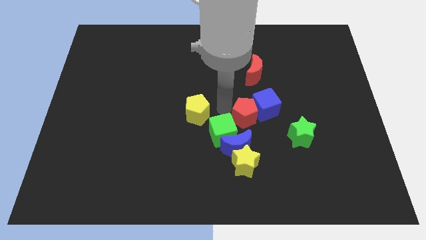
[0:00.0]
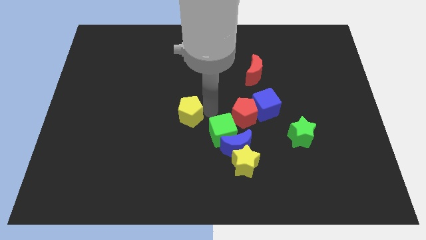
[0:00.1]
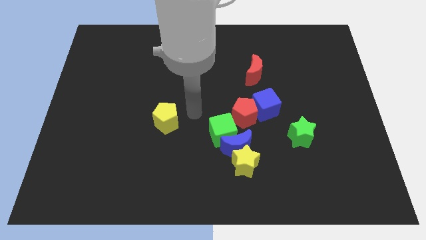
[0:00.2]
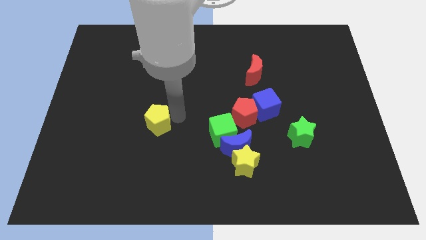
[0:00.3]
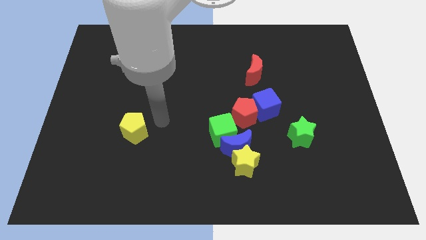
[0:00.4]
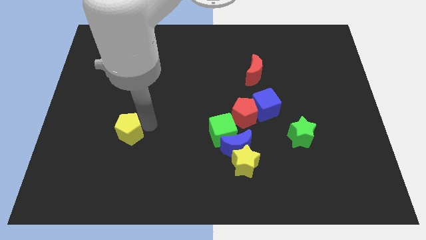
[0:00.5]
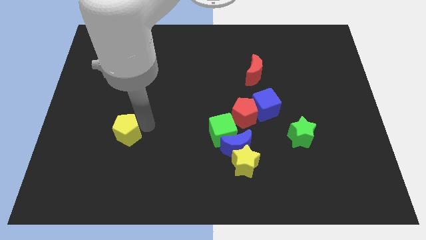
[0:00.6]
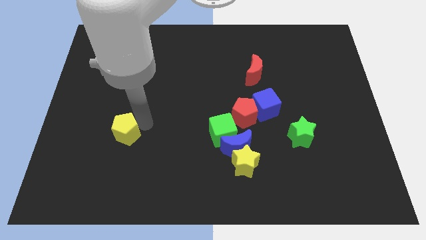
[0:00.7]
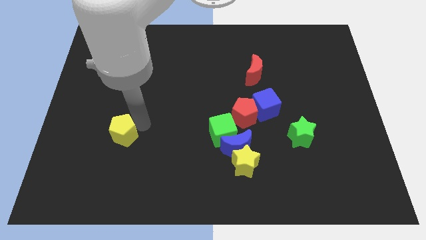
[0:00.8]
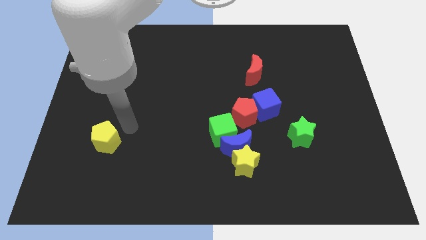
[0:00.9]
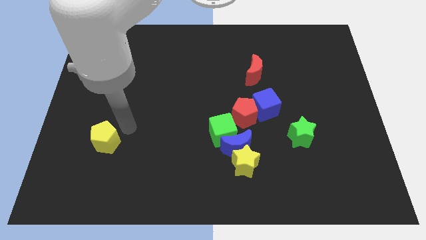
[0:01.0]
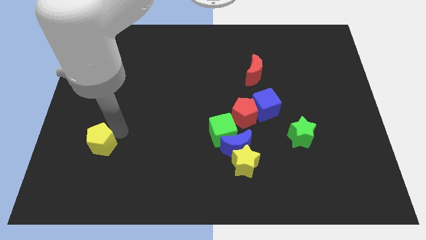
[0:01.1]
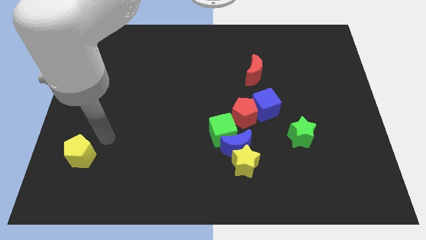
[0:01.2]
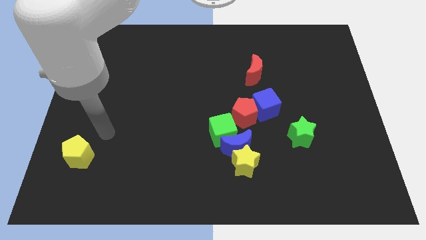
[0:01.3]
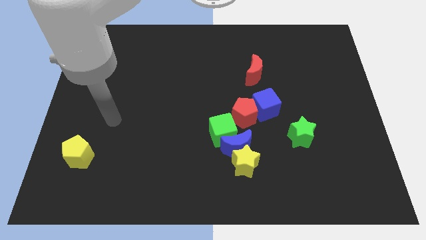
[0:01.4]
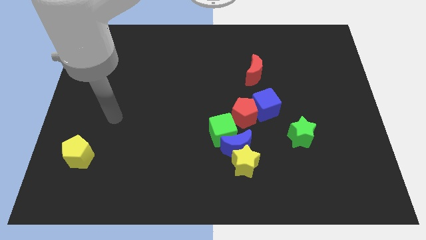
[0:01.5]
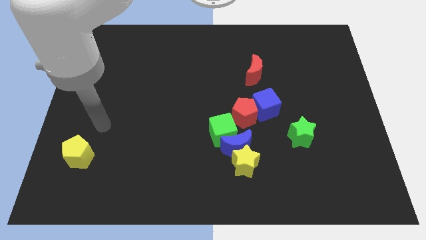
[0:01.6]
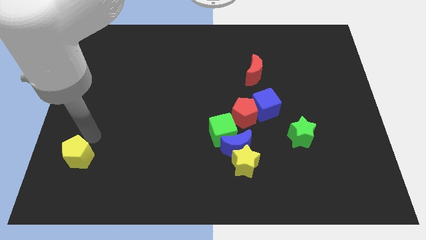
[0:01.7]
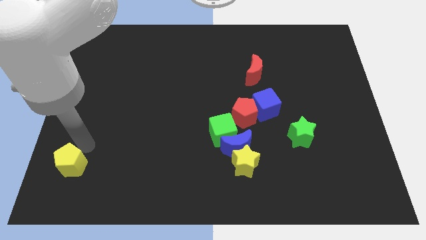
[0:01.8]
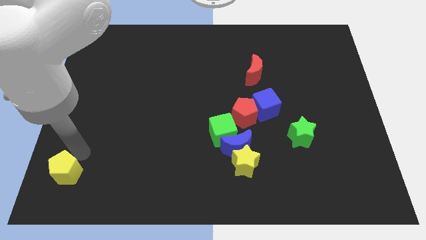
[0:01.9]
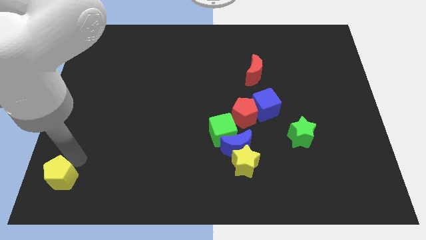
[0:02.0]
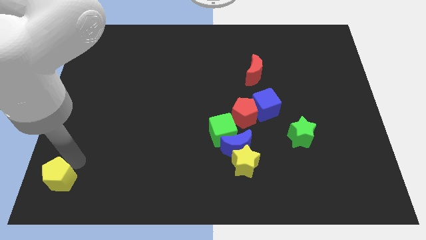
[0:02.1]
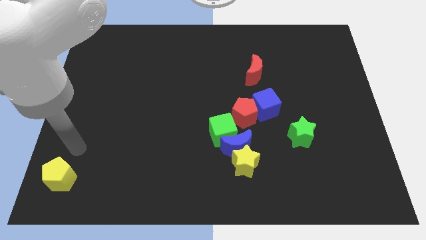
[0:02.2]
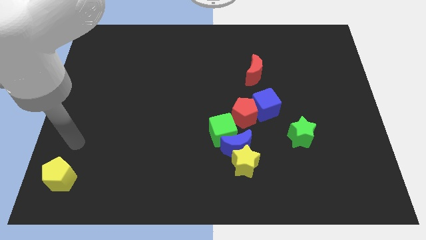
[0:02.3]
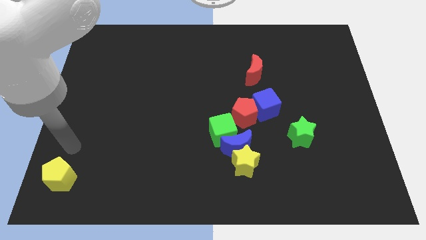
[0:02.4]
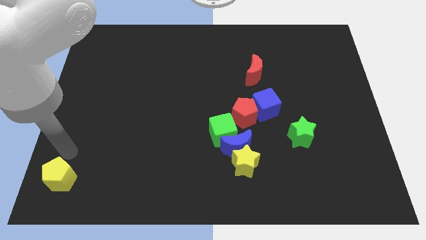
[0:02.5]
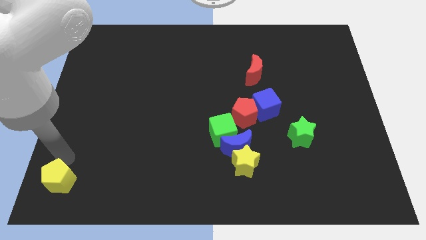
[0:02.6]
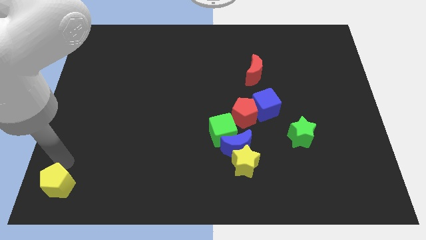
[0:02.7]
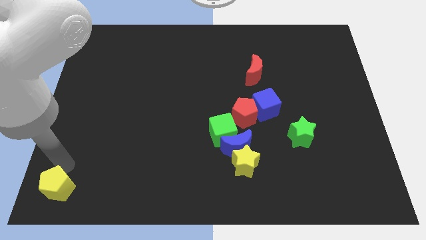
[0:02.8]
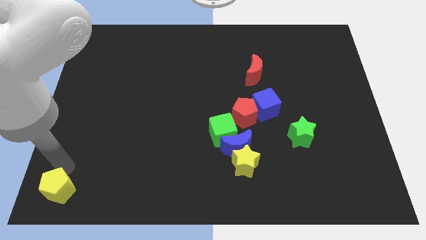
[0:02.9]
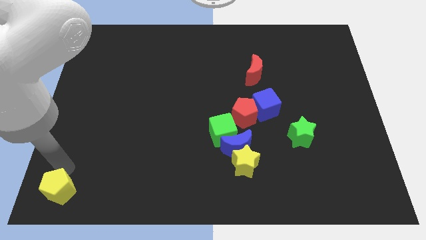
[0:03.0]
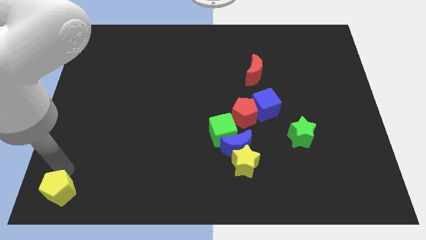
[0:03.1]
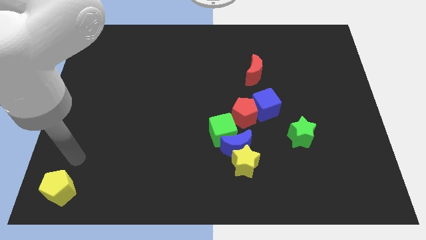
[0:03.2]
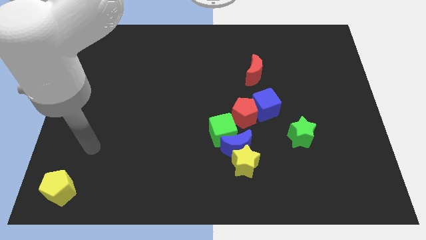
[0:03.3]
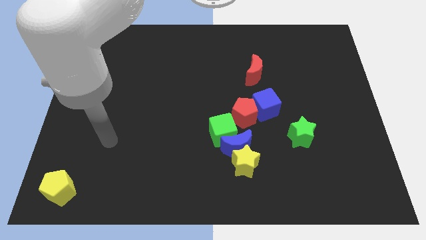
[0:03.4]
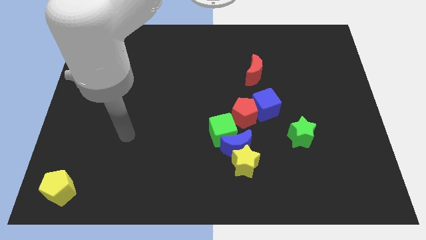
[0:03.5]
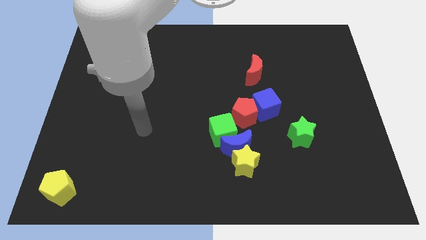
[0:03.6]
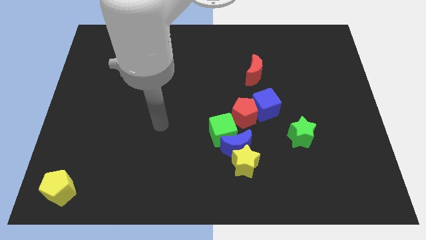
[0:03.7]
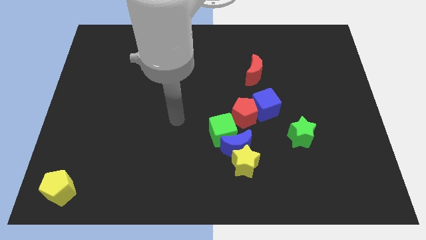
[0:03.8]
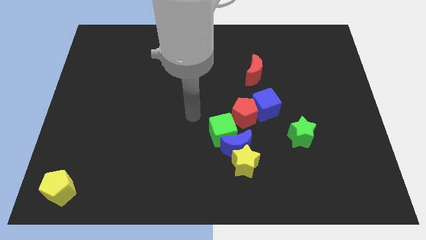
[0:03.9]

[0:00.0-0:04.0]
push the yellow pentagon to the bottom left corner of the board

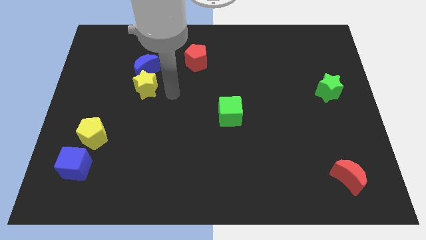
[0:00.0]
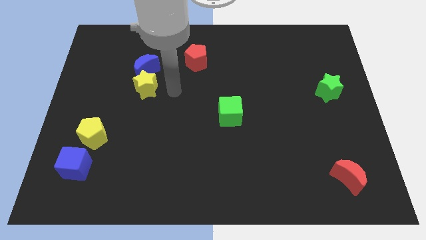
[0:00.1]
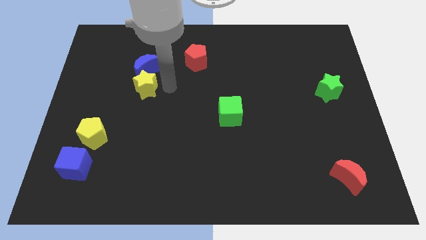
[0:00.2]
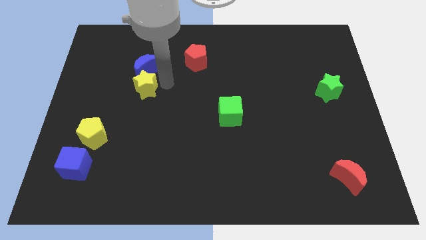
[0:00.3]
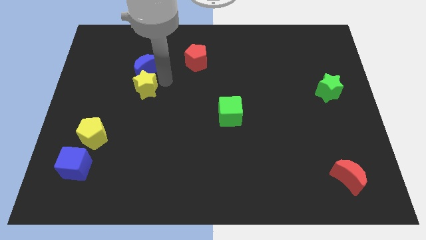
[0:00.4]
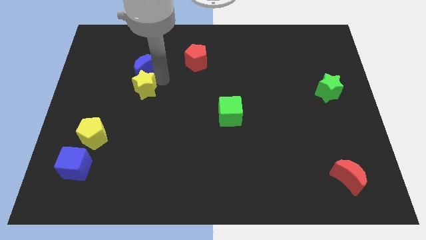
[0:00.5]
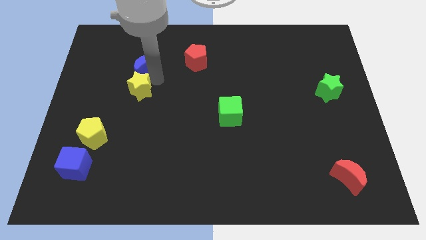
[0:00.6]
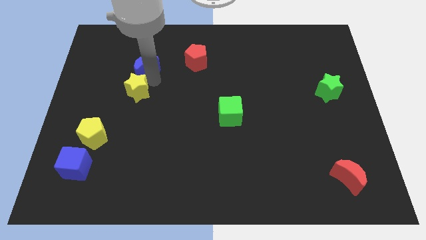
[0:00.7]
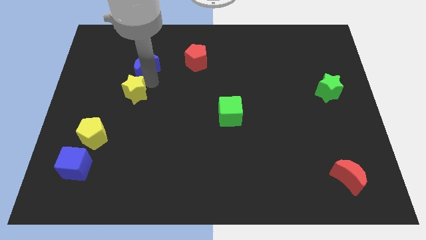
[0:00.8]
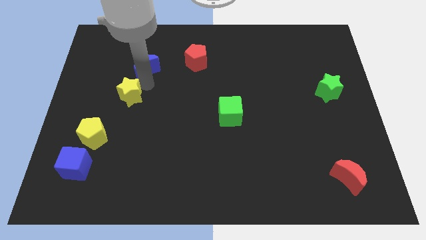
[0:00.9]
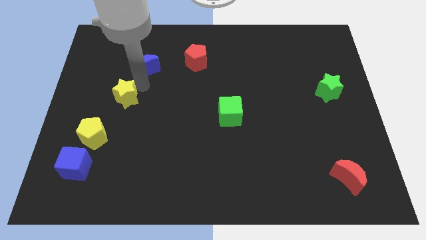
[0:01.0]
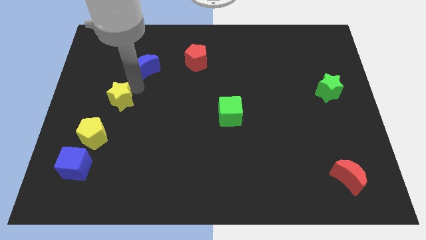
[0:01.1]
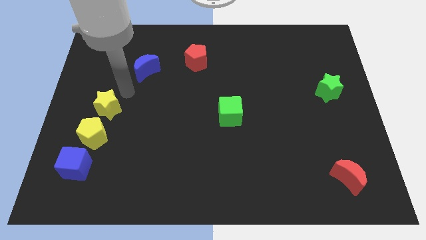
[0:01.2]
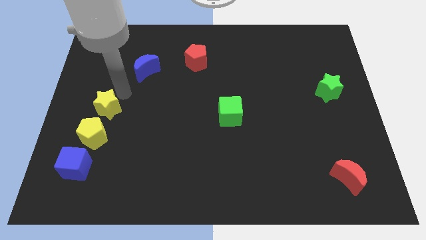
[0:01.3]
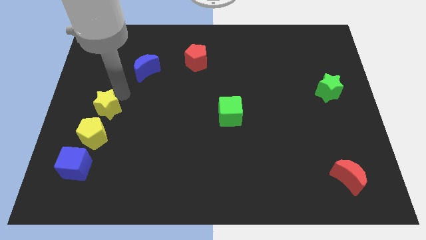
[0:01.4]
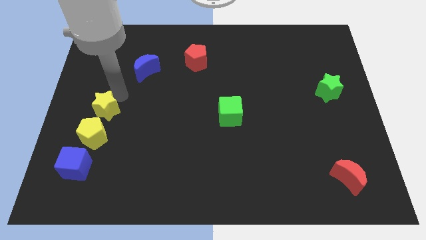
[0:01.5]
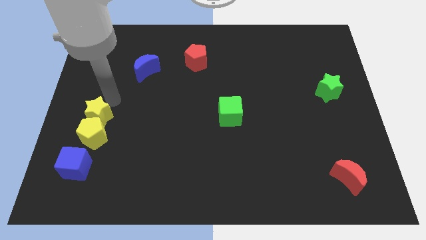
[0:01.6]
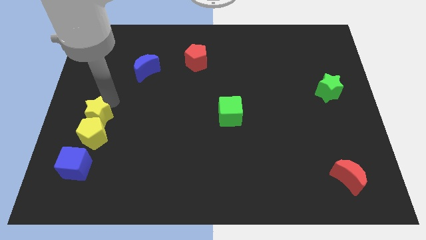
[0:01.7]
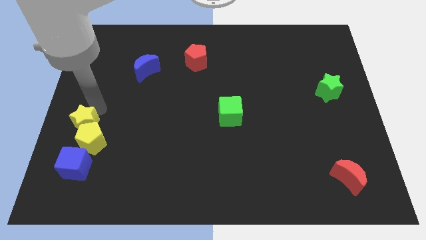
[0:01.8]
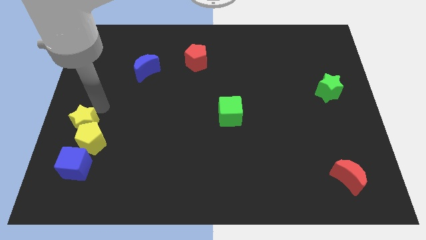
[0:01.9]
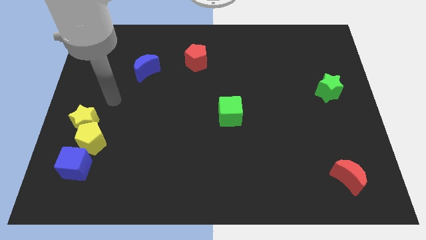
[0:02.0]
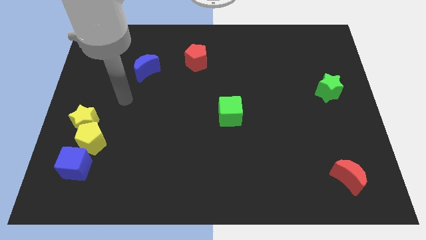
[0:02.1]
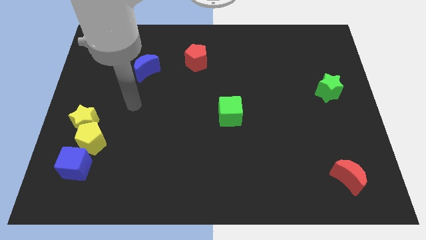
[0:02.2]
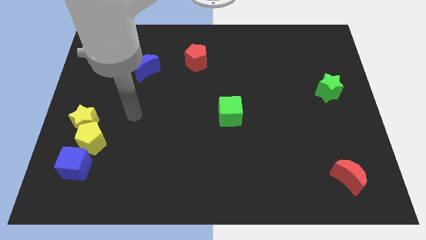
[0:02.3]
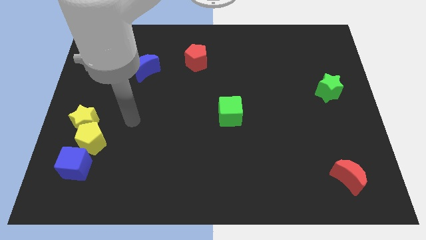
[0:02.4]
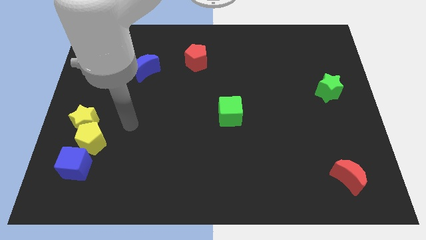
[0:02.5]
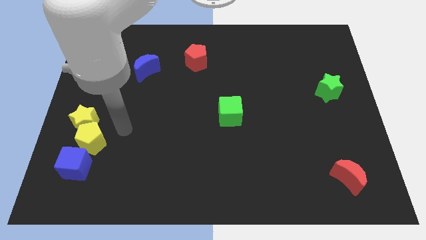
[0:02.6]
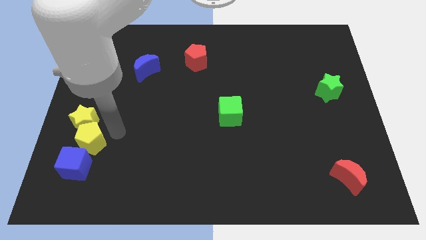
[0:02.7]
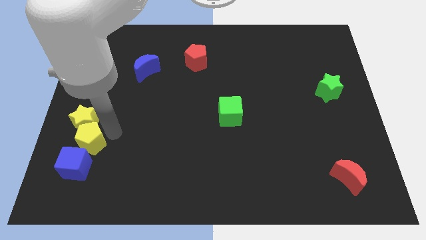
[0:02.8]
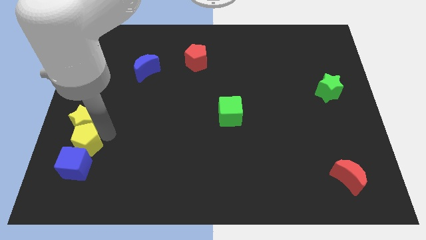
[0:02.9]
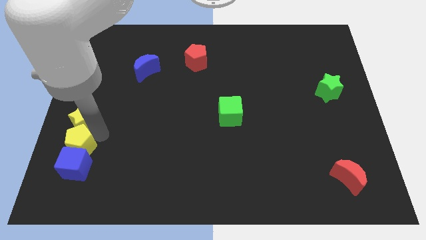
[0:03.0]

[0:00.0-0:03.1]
move the yellow star to the top of the yellow pentagon vertically

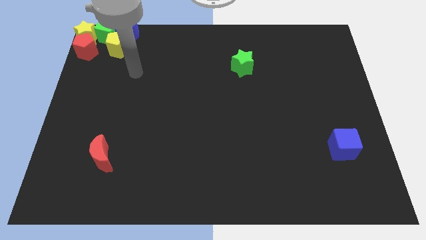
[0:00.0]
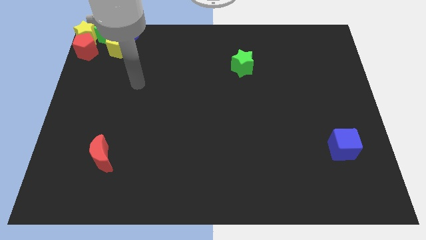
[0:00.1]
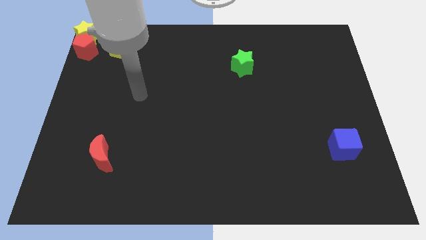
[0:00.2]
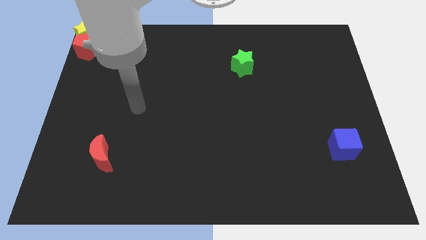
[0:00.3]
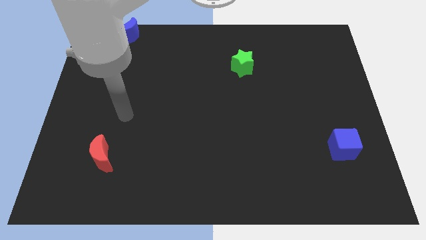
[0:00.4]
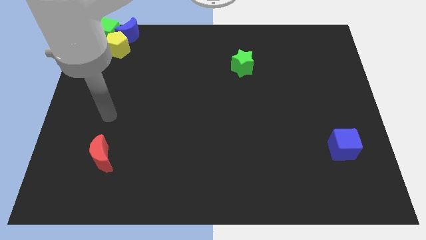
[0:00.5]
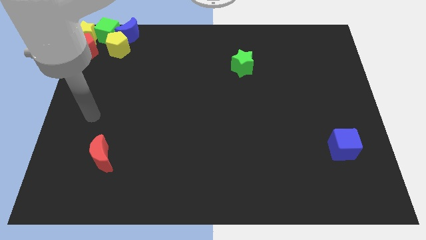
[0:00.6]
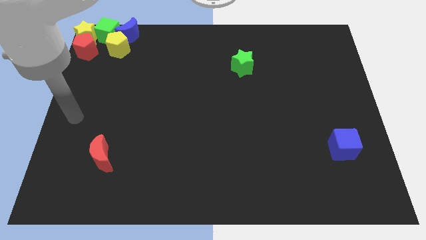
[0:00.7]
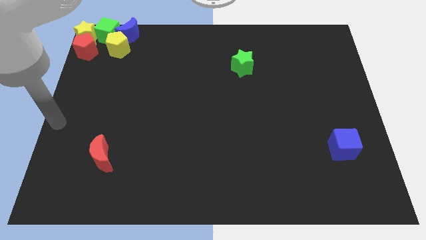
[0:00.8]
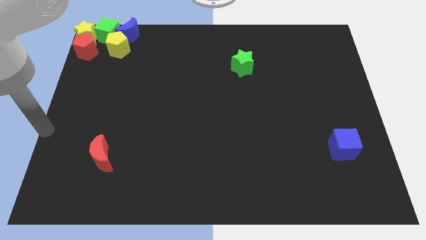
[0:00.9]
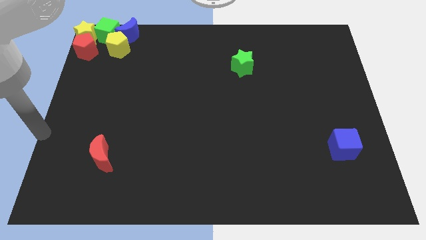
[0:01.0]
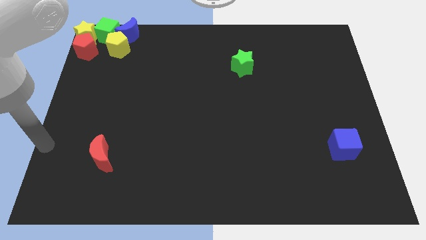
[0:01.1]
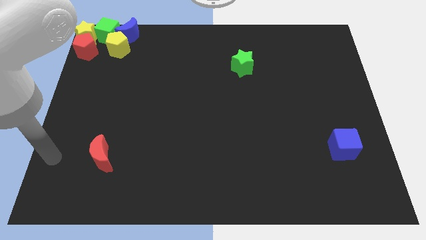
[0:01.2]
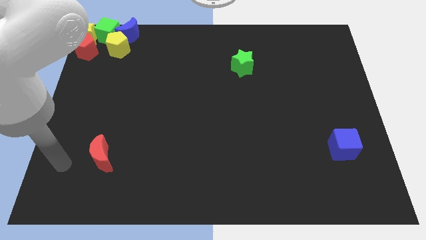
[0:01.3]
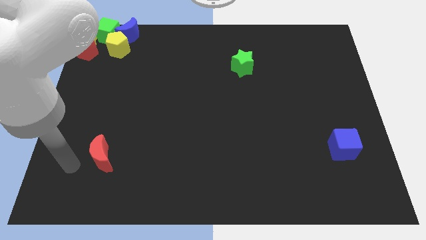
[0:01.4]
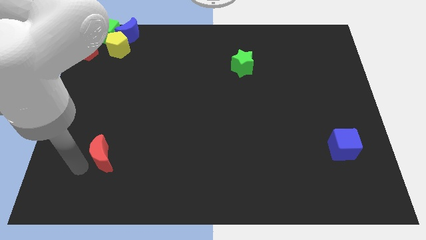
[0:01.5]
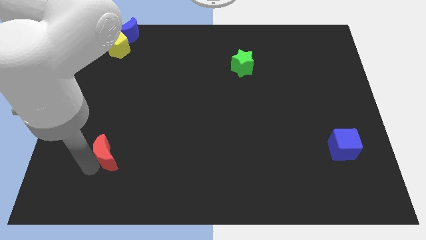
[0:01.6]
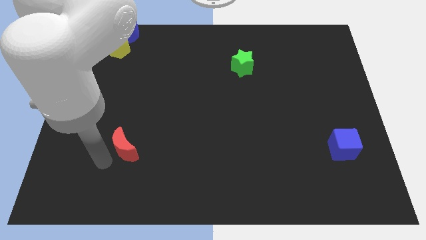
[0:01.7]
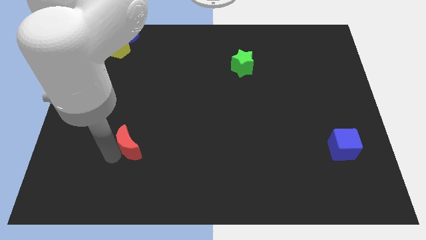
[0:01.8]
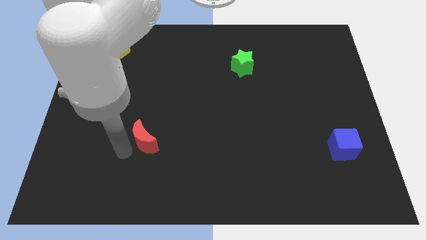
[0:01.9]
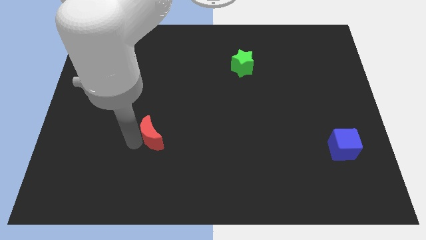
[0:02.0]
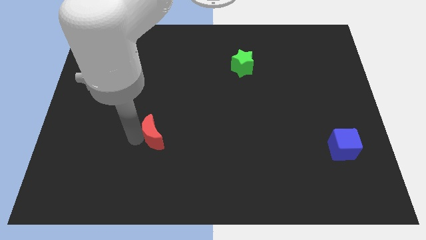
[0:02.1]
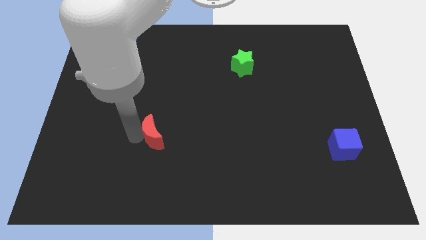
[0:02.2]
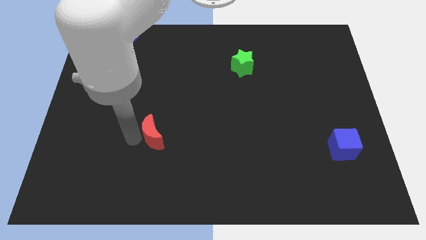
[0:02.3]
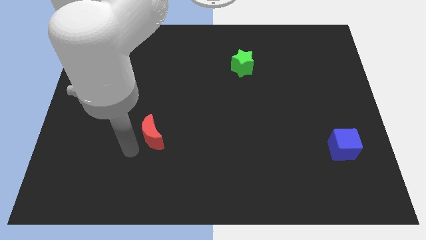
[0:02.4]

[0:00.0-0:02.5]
place the red crescent diagonal to the green star
